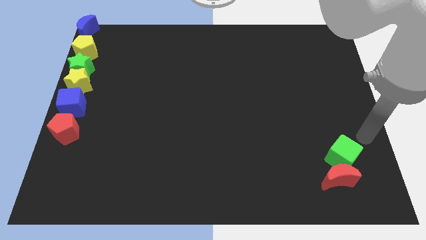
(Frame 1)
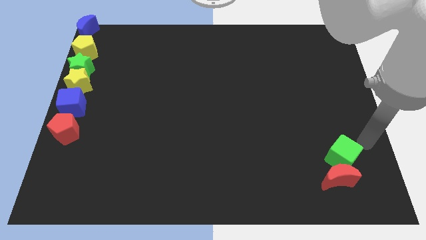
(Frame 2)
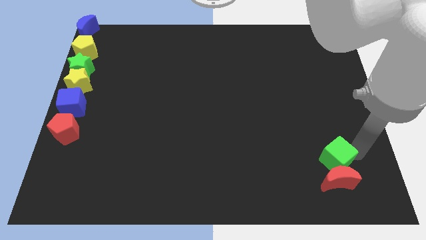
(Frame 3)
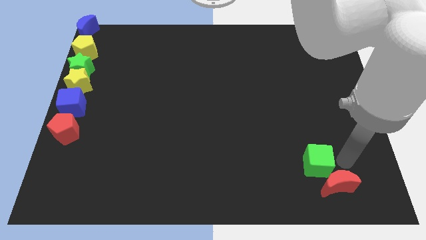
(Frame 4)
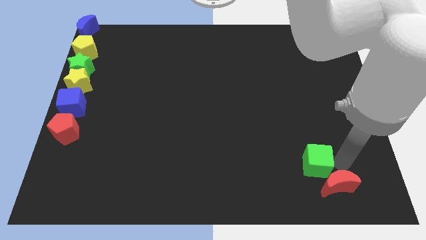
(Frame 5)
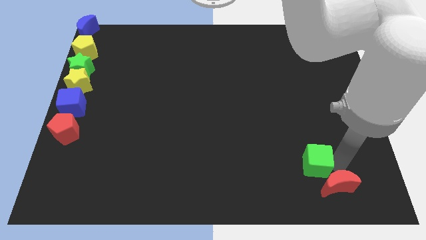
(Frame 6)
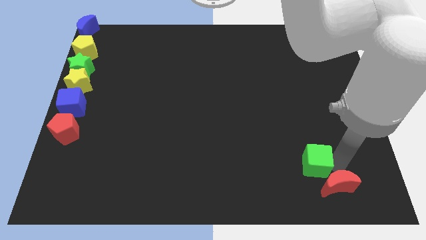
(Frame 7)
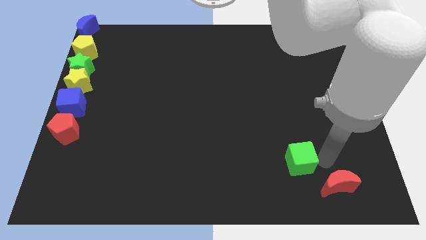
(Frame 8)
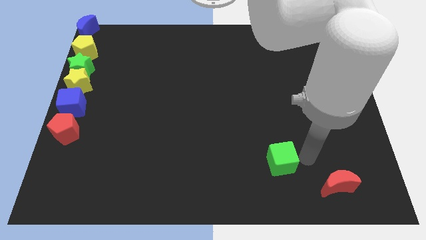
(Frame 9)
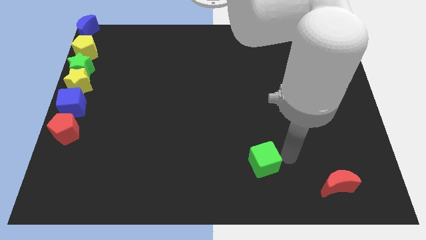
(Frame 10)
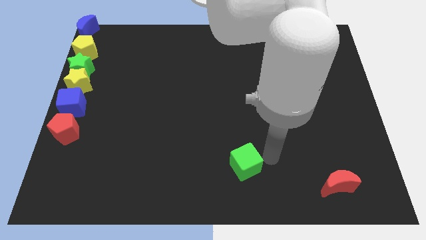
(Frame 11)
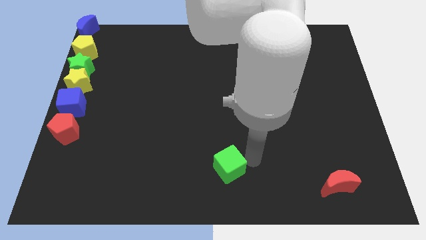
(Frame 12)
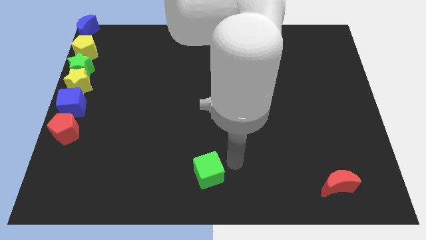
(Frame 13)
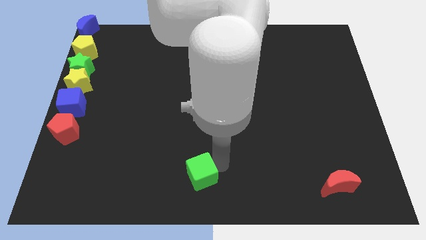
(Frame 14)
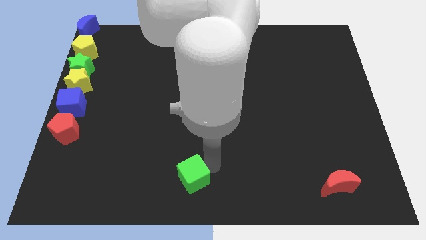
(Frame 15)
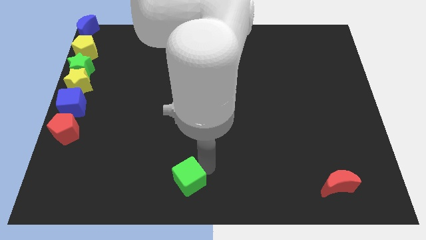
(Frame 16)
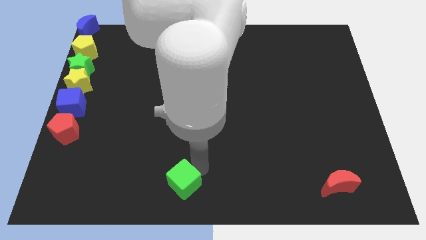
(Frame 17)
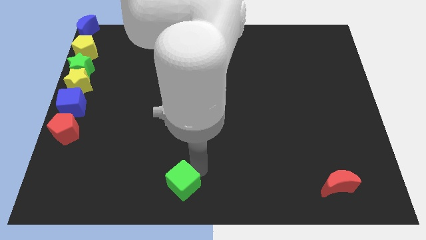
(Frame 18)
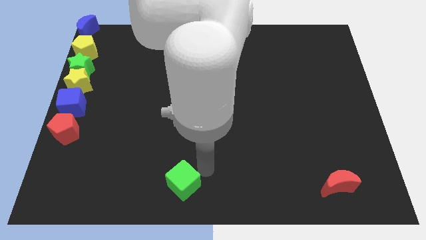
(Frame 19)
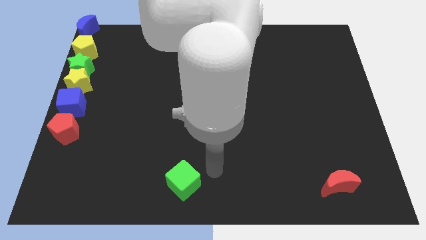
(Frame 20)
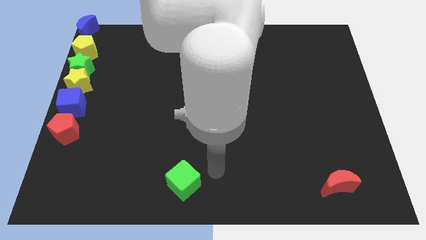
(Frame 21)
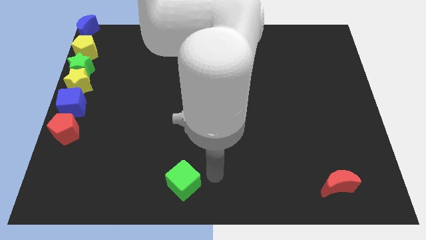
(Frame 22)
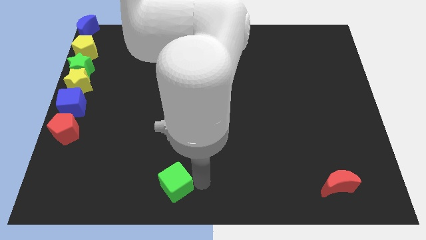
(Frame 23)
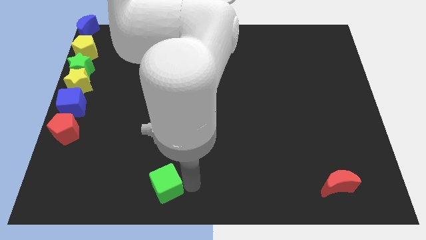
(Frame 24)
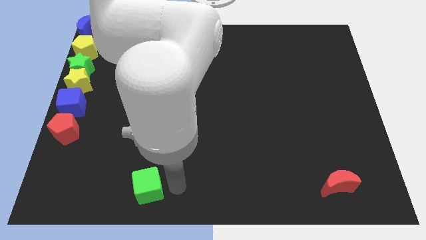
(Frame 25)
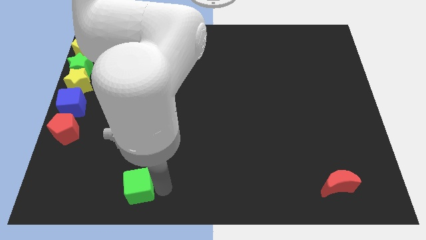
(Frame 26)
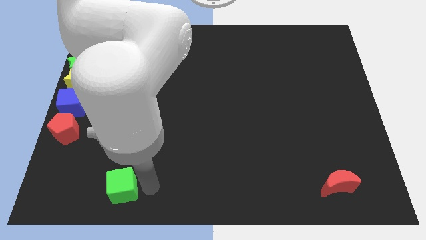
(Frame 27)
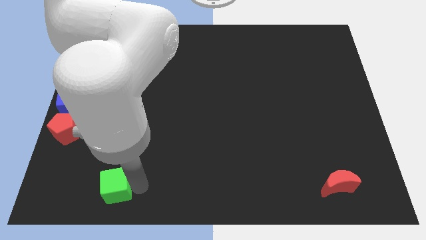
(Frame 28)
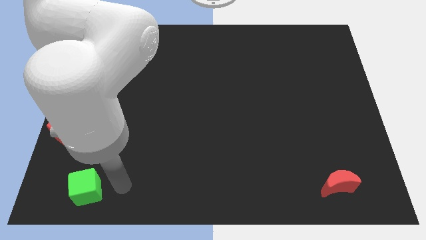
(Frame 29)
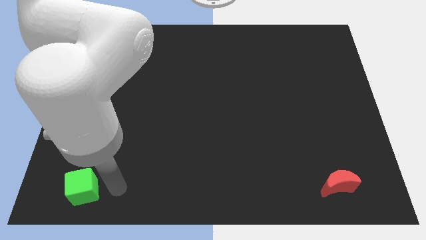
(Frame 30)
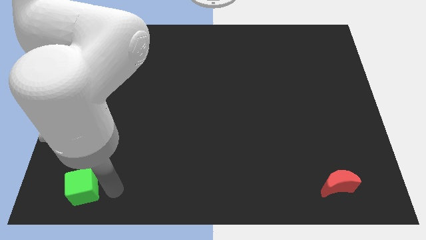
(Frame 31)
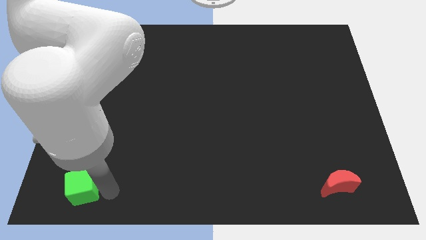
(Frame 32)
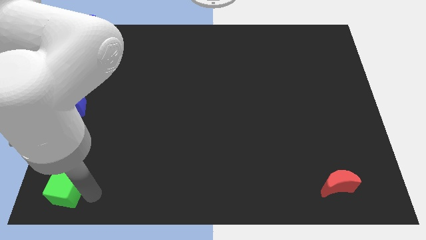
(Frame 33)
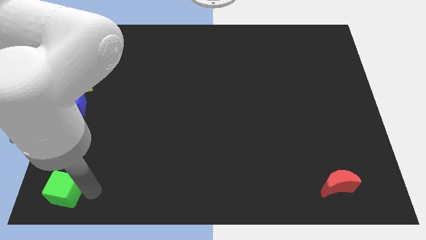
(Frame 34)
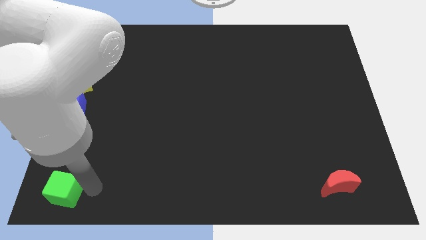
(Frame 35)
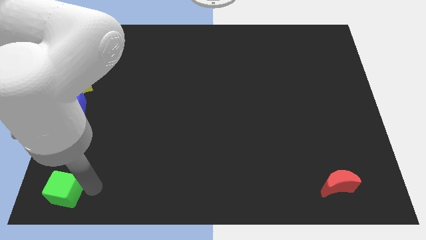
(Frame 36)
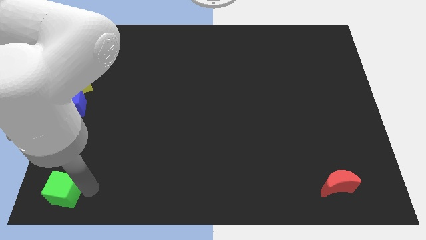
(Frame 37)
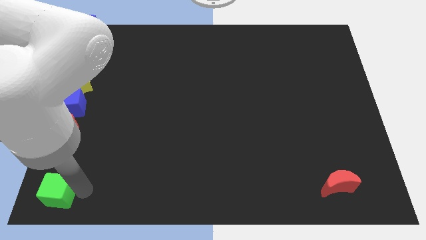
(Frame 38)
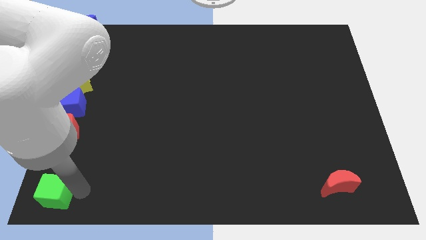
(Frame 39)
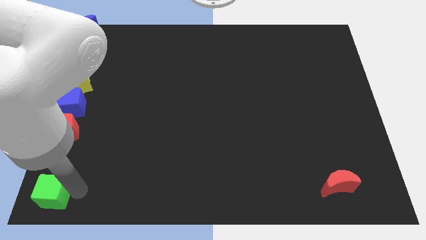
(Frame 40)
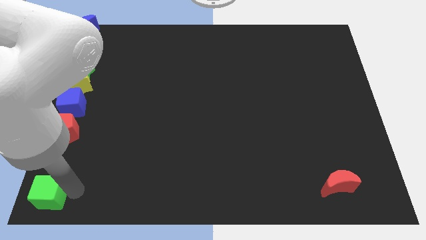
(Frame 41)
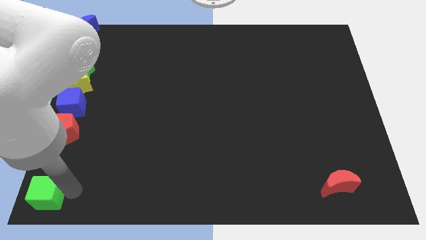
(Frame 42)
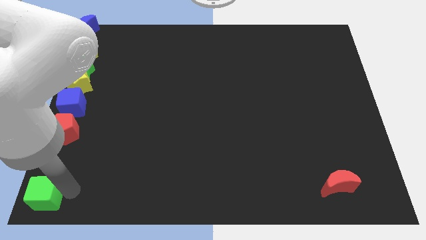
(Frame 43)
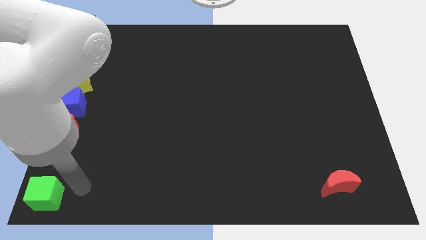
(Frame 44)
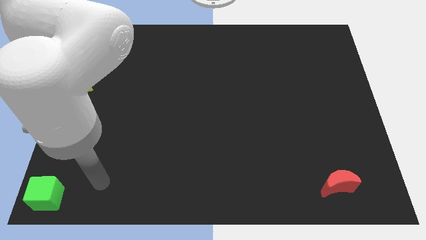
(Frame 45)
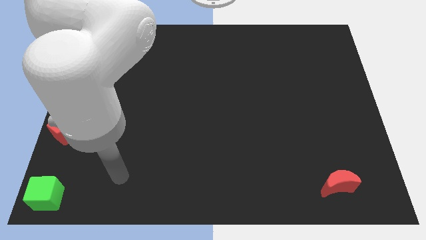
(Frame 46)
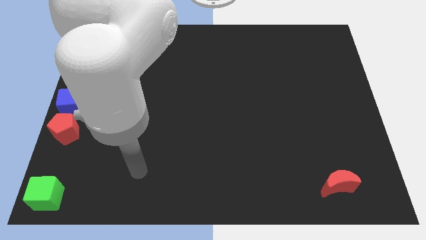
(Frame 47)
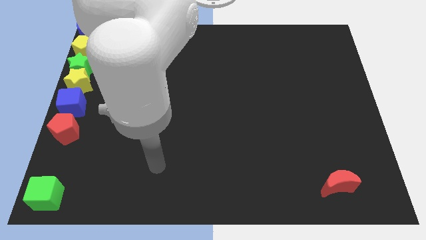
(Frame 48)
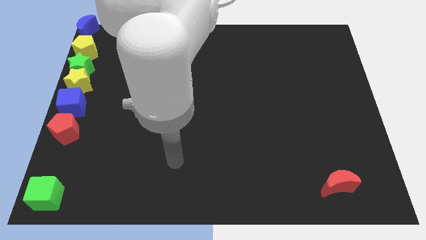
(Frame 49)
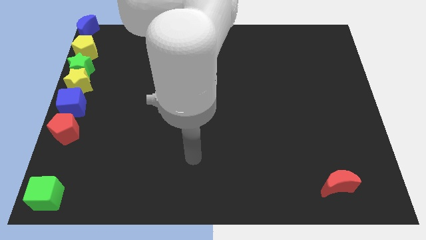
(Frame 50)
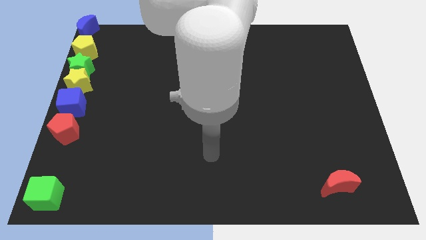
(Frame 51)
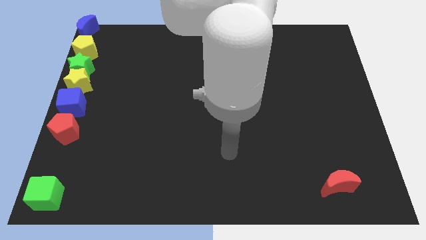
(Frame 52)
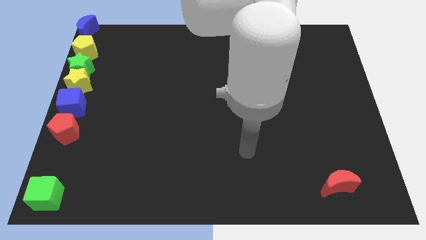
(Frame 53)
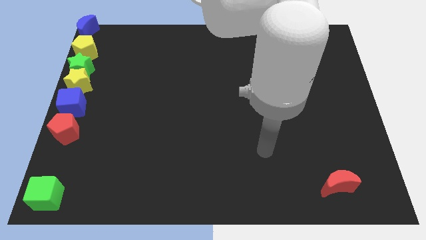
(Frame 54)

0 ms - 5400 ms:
move the green cube to the bottom left

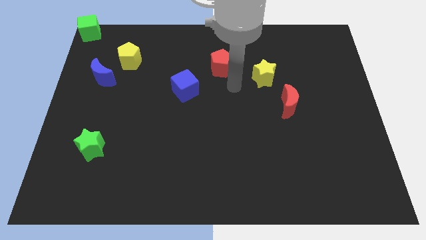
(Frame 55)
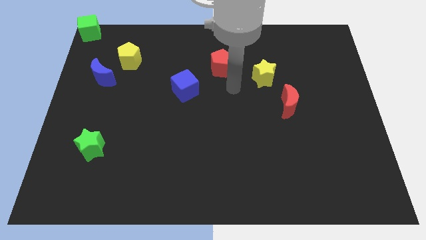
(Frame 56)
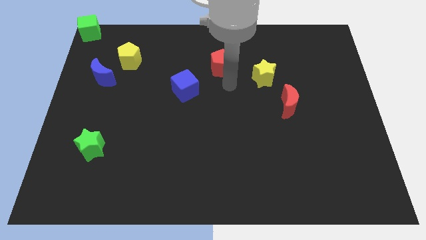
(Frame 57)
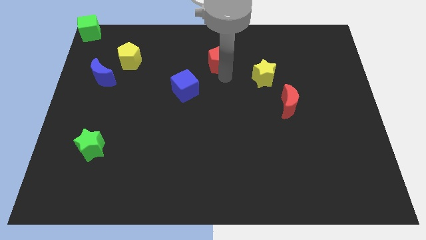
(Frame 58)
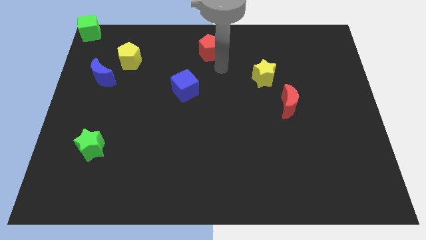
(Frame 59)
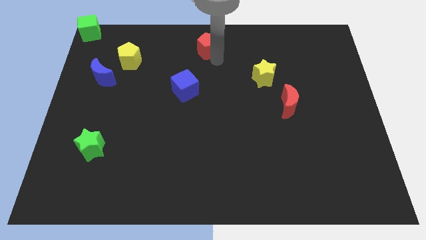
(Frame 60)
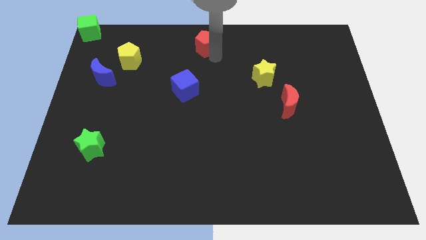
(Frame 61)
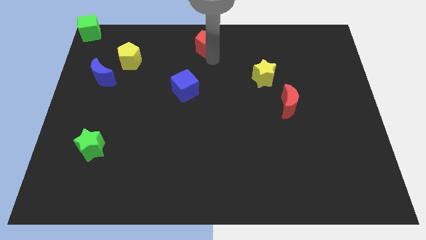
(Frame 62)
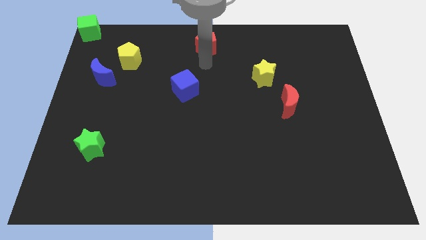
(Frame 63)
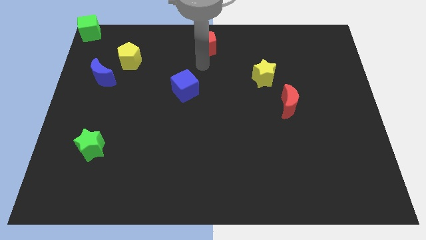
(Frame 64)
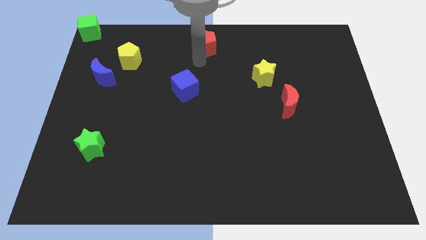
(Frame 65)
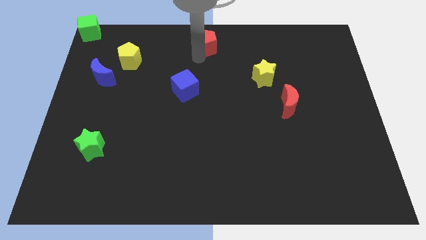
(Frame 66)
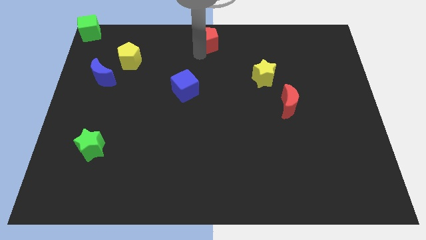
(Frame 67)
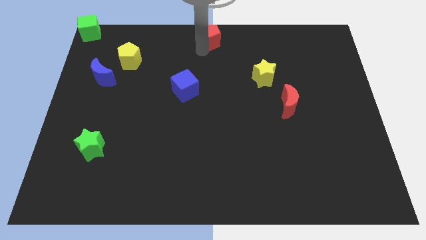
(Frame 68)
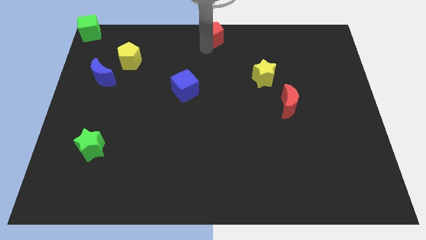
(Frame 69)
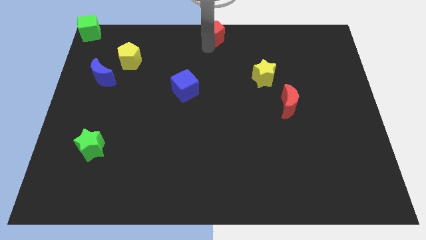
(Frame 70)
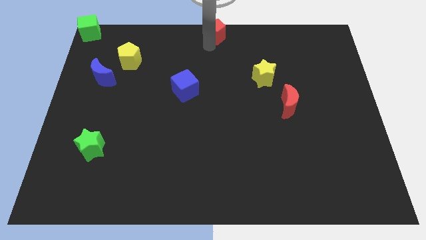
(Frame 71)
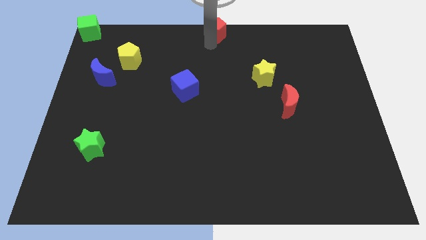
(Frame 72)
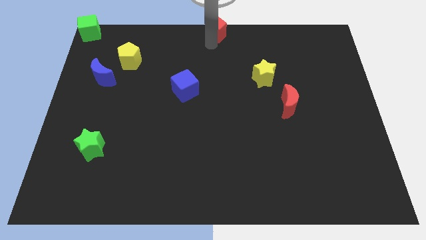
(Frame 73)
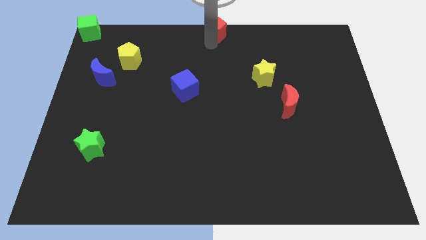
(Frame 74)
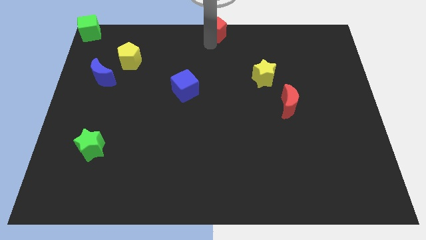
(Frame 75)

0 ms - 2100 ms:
move the red pentagon towards the top center of the board

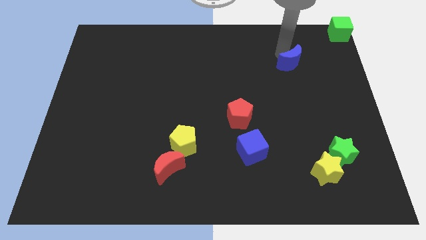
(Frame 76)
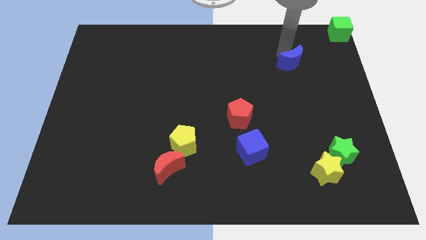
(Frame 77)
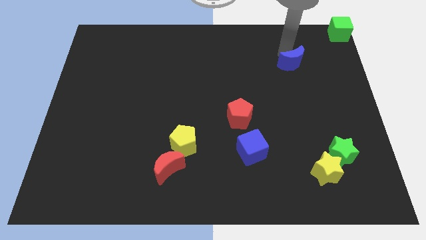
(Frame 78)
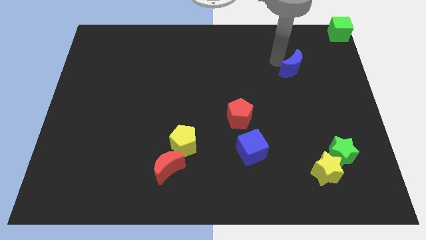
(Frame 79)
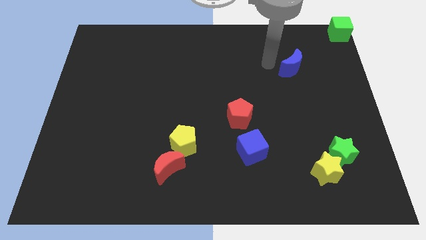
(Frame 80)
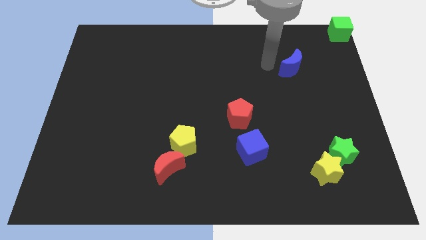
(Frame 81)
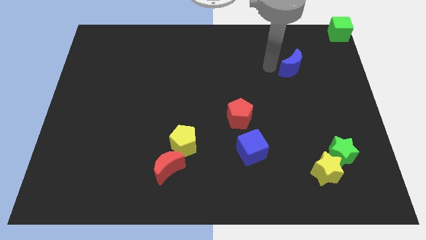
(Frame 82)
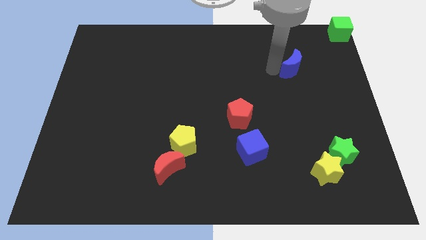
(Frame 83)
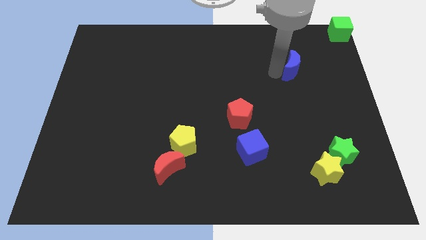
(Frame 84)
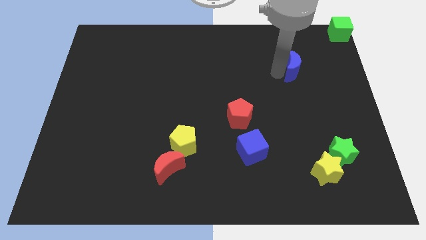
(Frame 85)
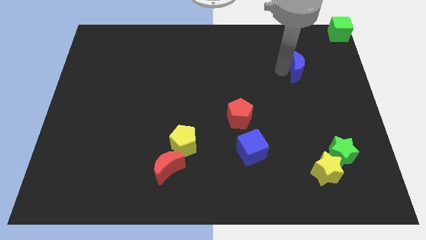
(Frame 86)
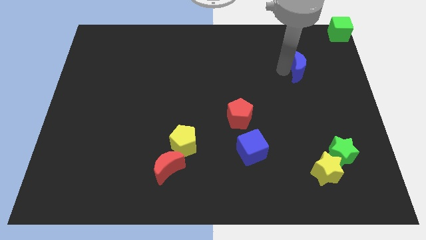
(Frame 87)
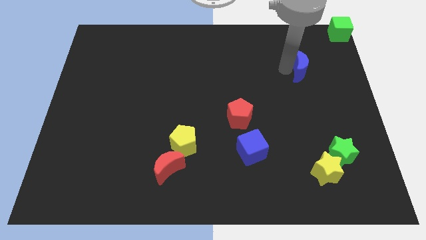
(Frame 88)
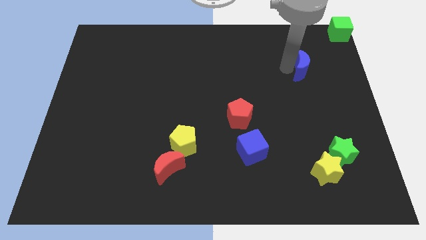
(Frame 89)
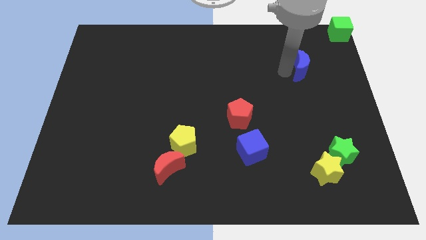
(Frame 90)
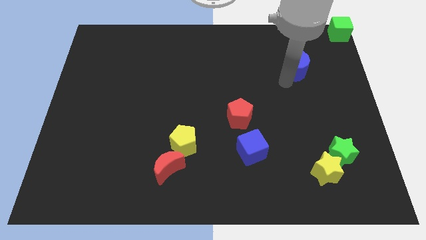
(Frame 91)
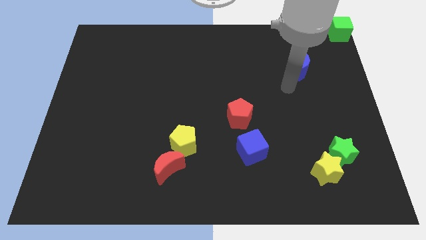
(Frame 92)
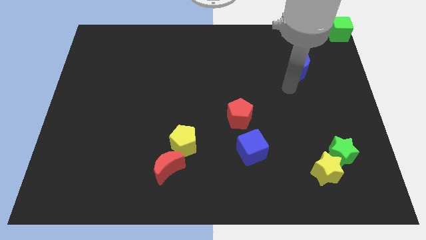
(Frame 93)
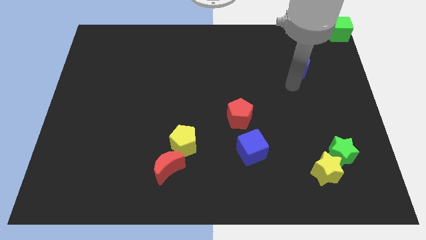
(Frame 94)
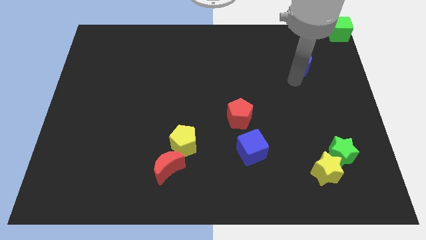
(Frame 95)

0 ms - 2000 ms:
move the blue moon diagonal to green cube
